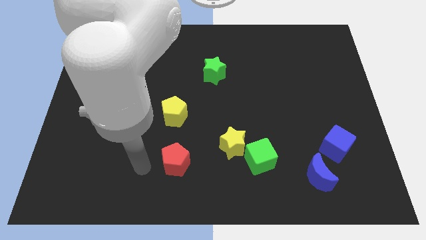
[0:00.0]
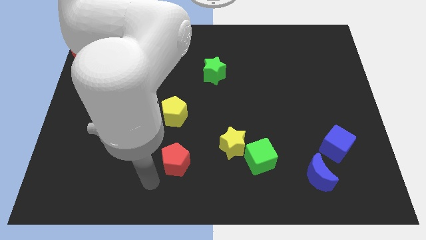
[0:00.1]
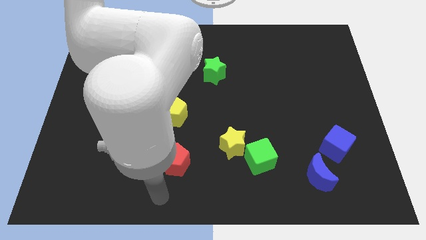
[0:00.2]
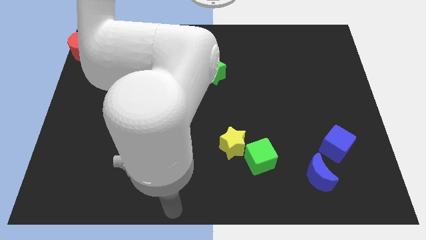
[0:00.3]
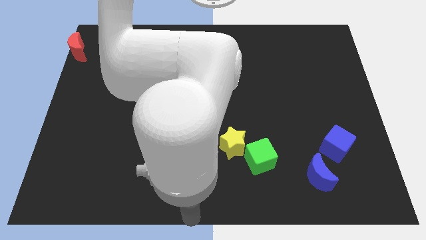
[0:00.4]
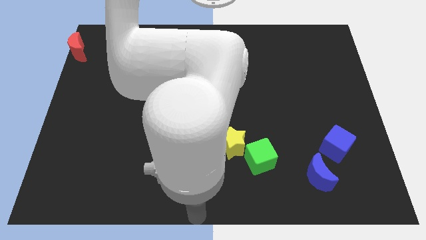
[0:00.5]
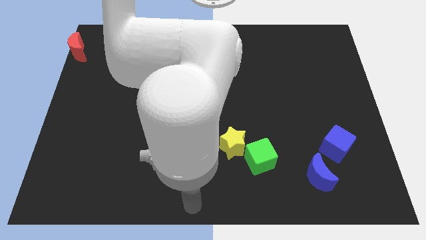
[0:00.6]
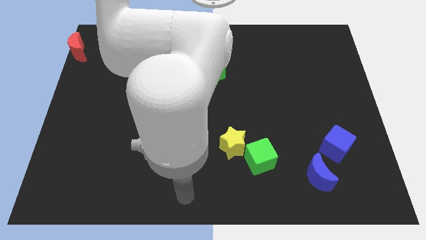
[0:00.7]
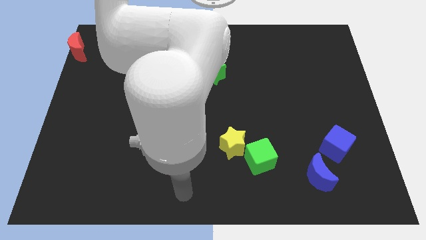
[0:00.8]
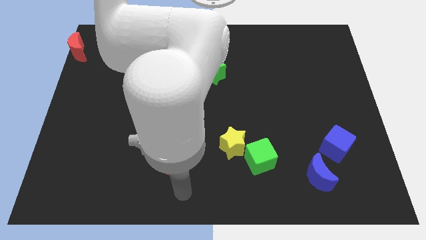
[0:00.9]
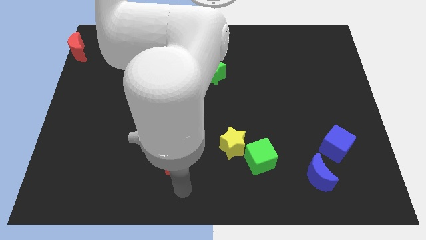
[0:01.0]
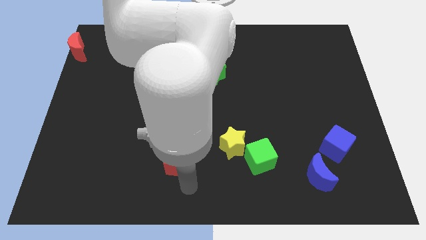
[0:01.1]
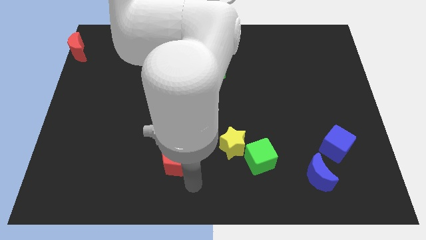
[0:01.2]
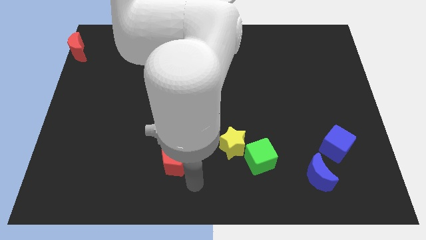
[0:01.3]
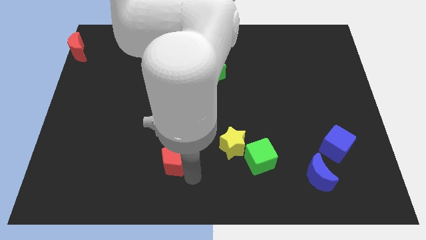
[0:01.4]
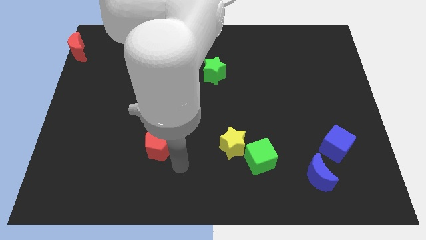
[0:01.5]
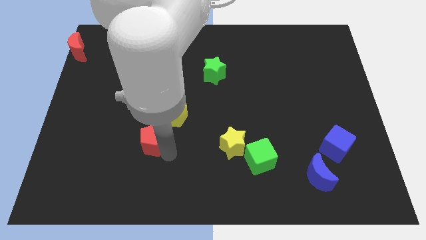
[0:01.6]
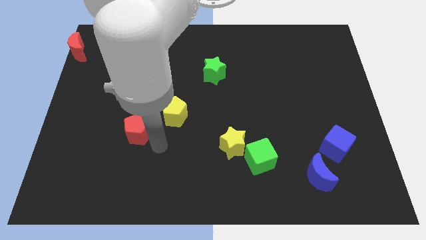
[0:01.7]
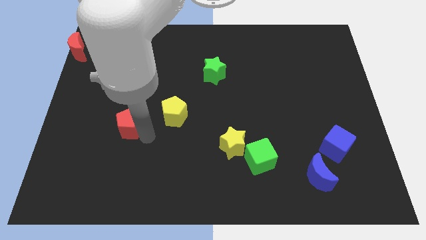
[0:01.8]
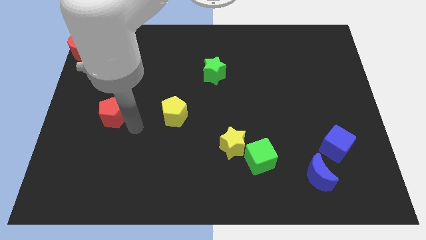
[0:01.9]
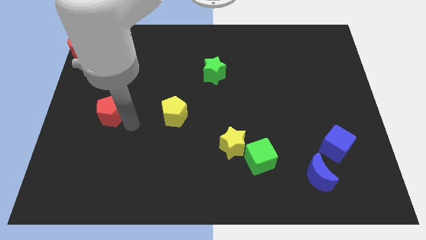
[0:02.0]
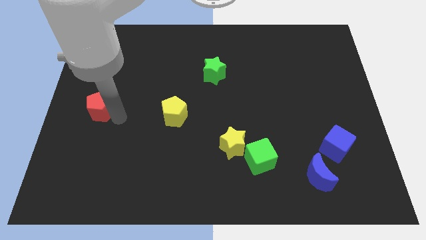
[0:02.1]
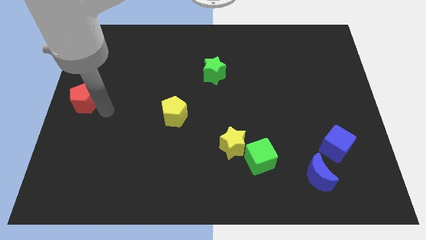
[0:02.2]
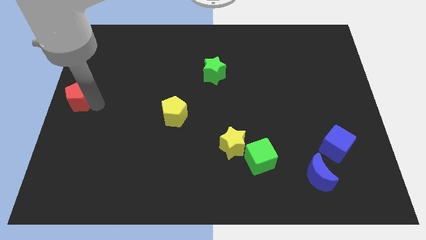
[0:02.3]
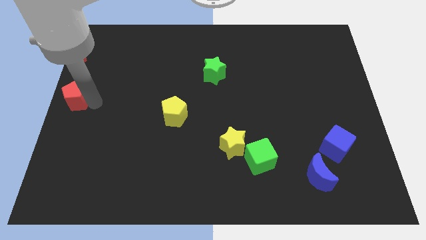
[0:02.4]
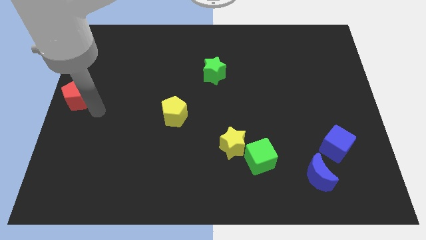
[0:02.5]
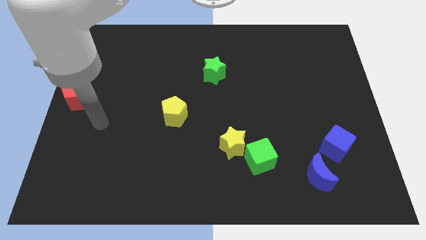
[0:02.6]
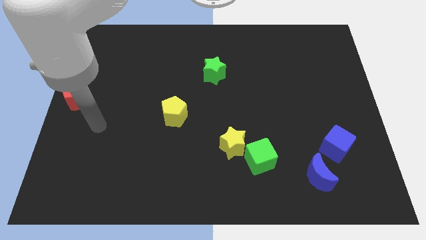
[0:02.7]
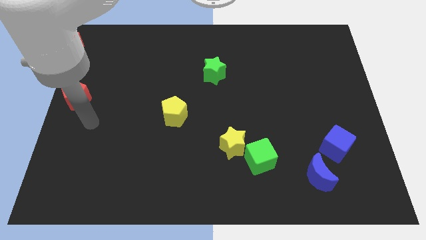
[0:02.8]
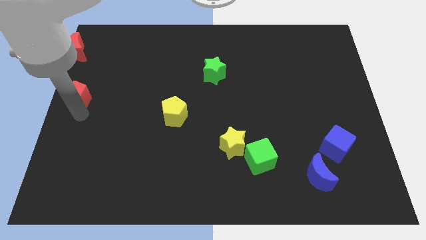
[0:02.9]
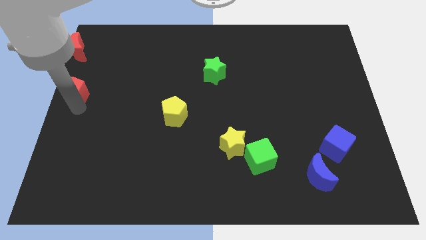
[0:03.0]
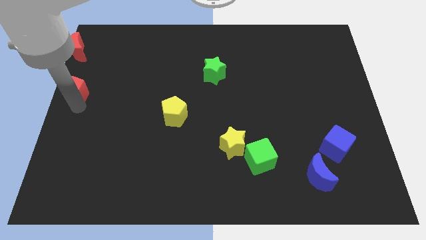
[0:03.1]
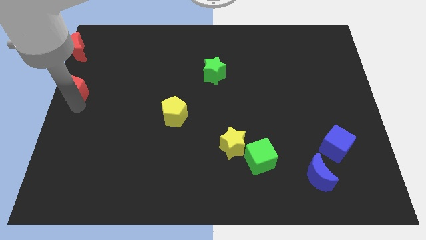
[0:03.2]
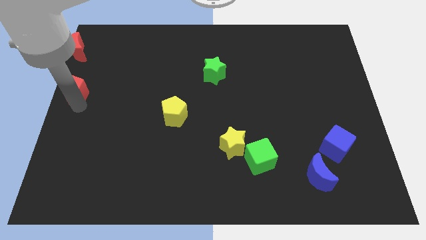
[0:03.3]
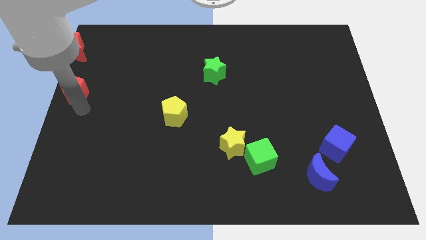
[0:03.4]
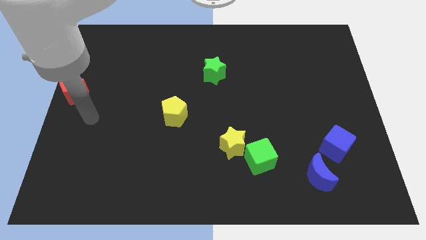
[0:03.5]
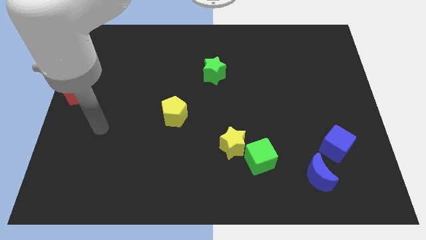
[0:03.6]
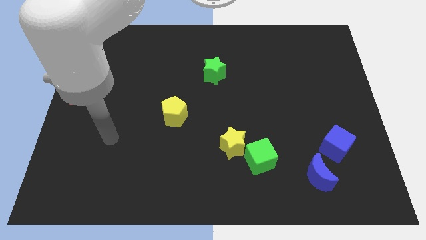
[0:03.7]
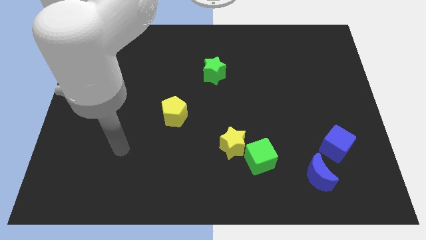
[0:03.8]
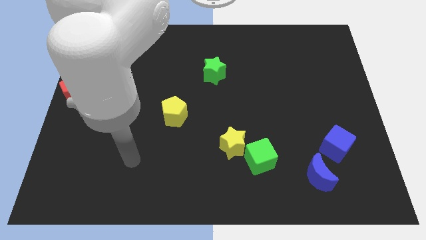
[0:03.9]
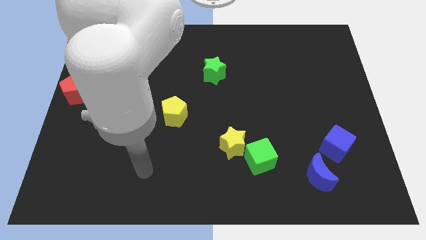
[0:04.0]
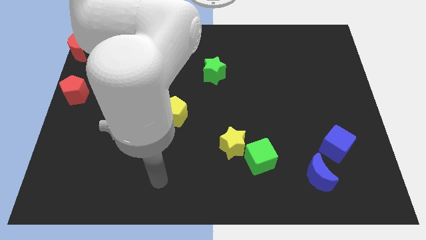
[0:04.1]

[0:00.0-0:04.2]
move the red pentagon below to the red moon

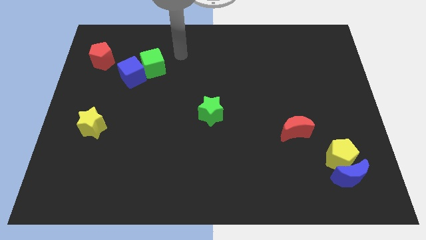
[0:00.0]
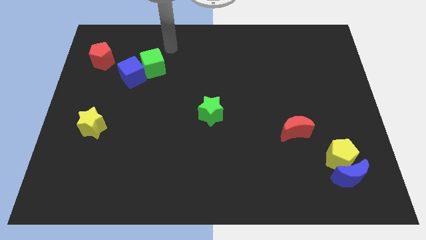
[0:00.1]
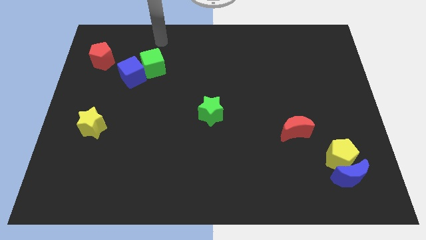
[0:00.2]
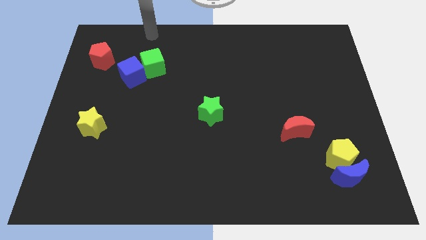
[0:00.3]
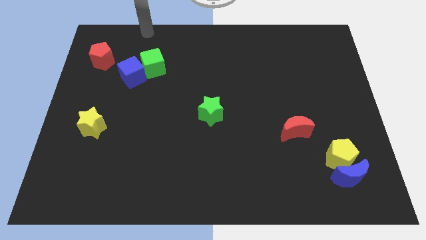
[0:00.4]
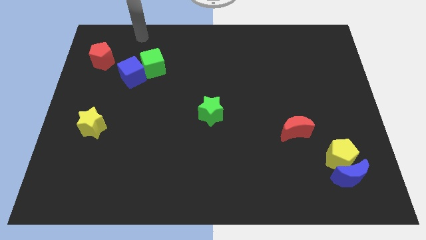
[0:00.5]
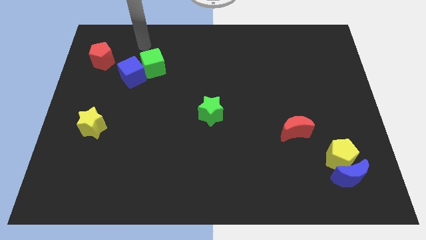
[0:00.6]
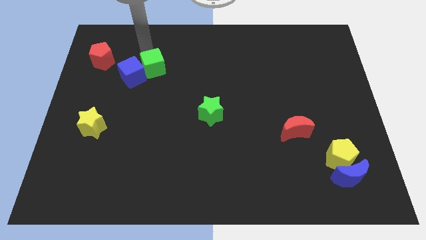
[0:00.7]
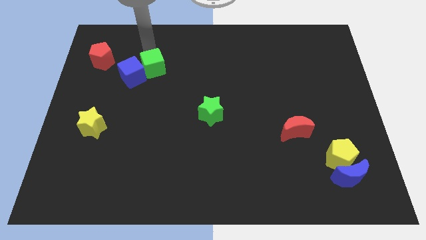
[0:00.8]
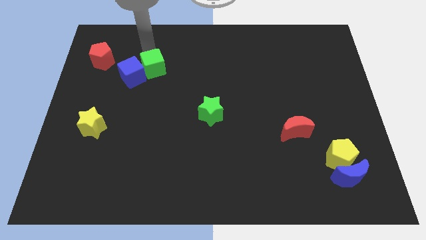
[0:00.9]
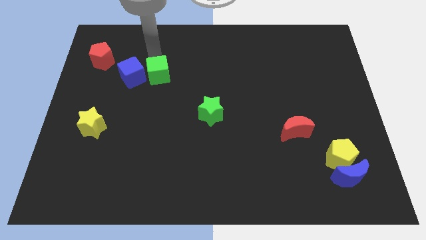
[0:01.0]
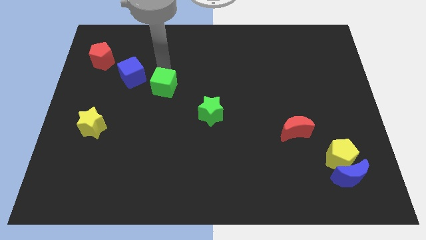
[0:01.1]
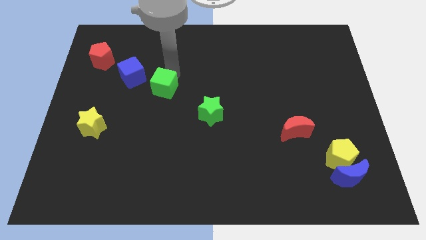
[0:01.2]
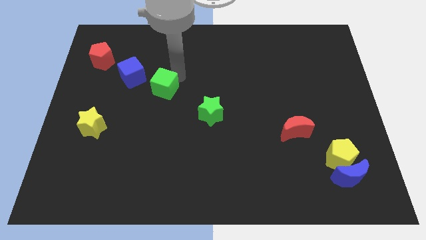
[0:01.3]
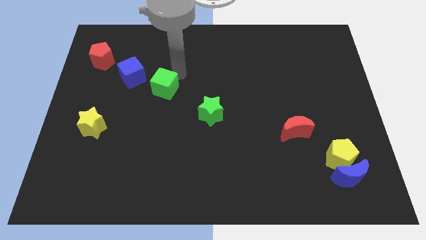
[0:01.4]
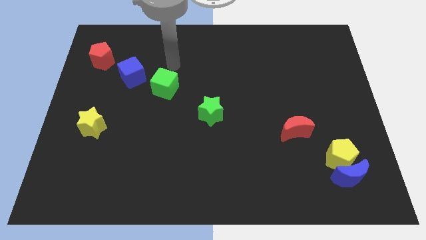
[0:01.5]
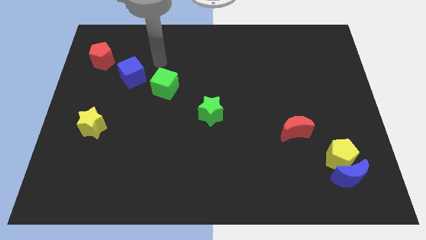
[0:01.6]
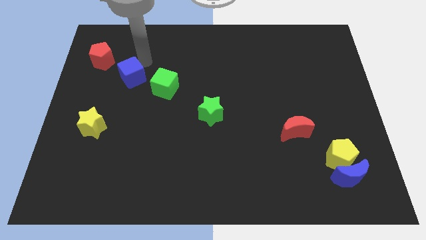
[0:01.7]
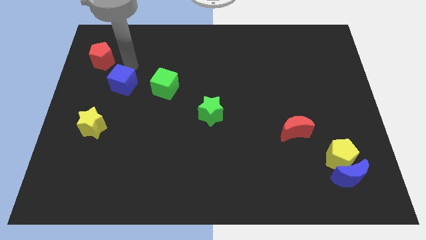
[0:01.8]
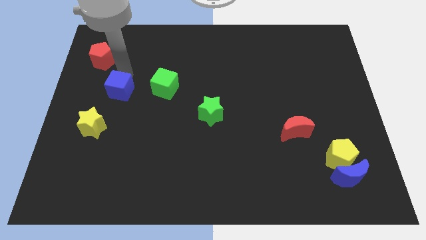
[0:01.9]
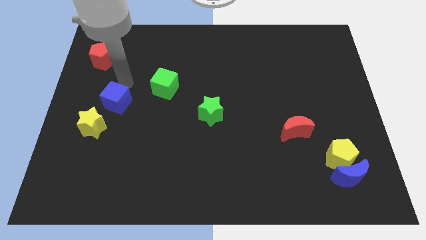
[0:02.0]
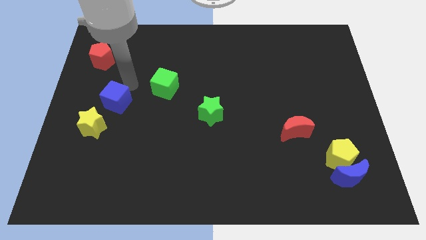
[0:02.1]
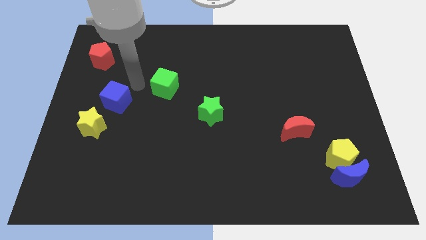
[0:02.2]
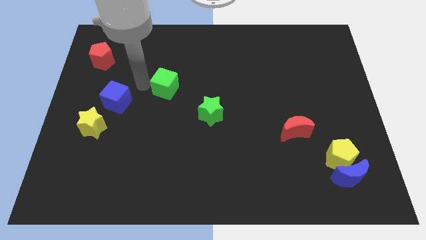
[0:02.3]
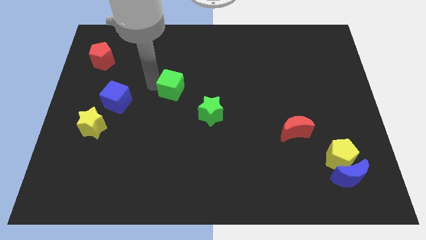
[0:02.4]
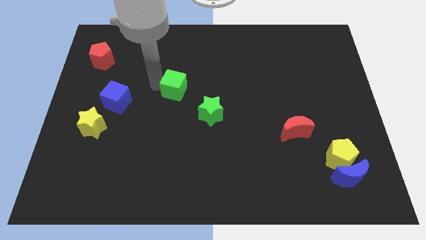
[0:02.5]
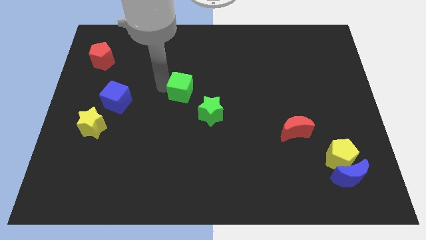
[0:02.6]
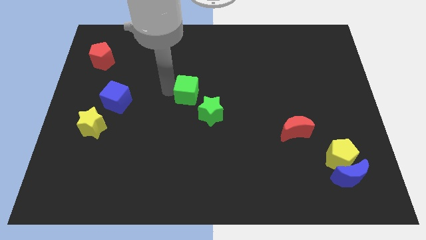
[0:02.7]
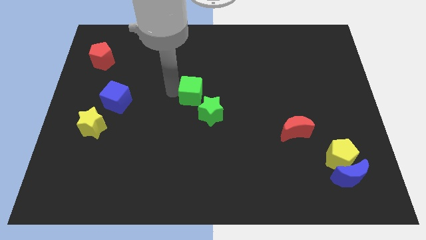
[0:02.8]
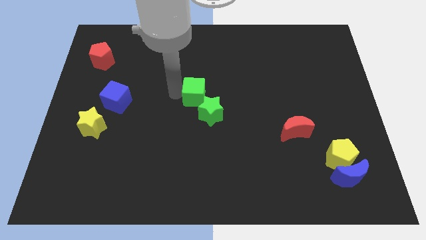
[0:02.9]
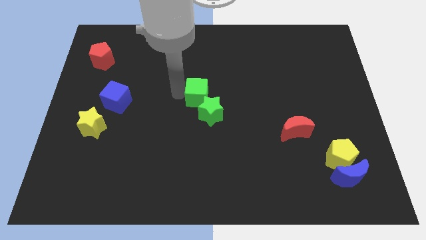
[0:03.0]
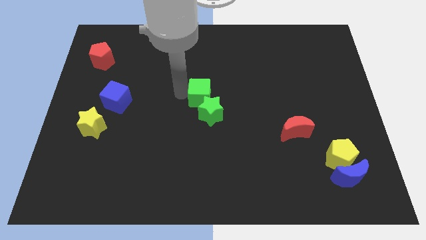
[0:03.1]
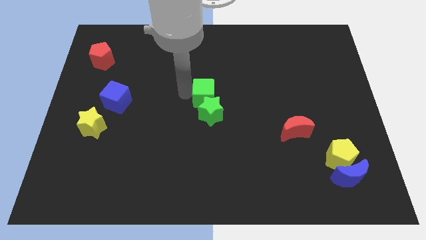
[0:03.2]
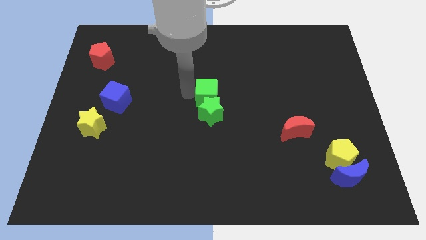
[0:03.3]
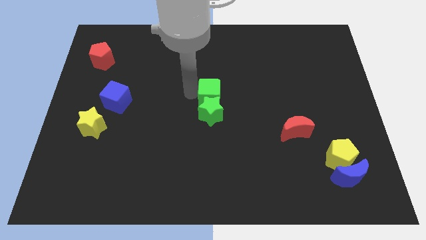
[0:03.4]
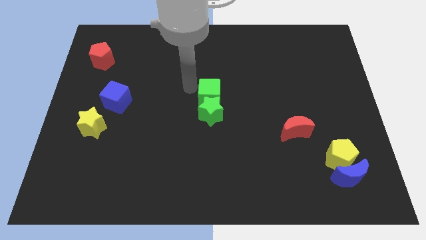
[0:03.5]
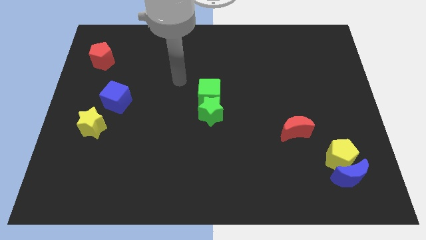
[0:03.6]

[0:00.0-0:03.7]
move the green cube towards the green star

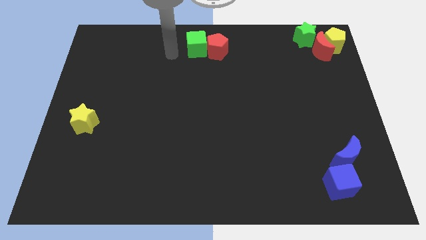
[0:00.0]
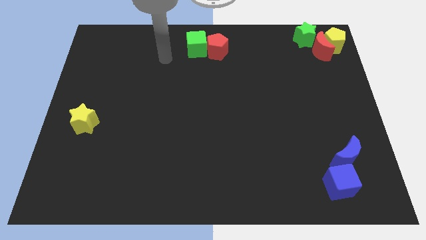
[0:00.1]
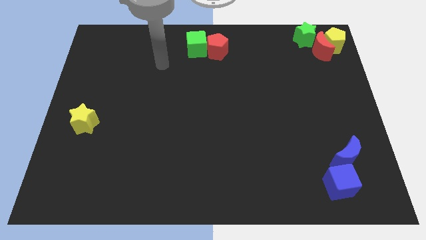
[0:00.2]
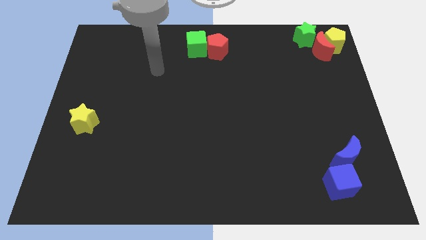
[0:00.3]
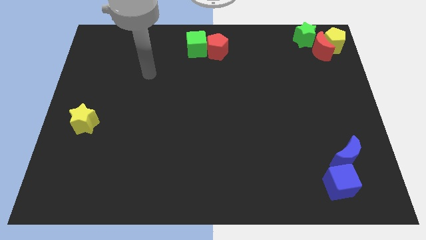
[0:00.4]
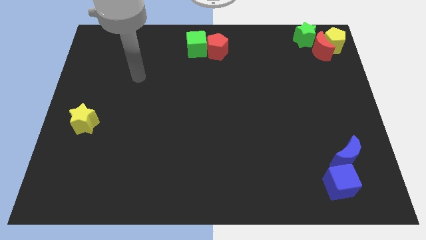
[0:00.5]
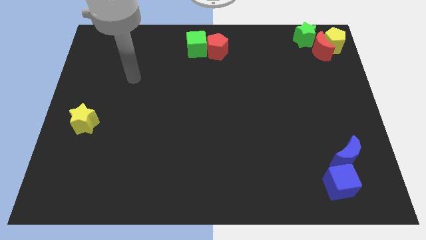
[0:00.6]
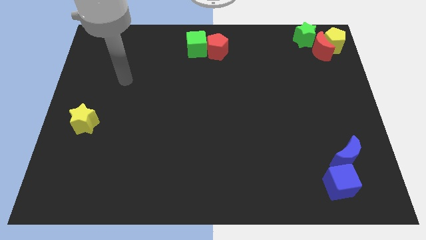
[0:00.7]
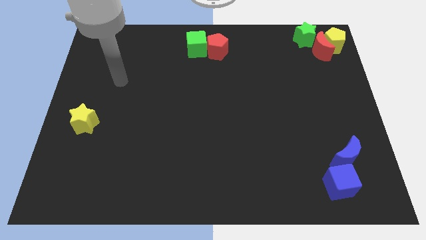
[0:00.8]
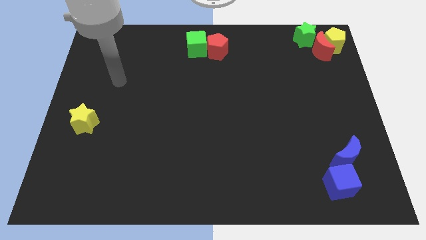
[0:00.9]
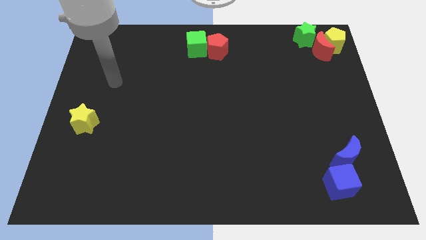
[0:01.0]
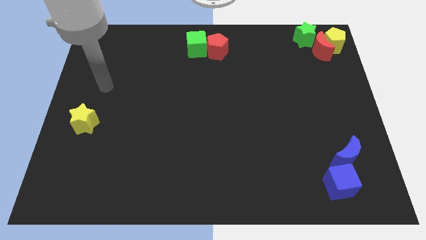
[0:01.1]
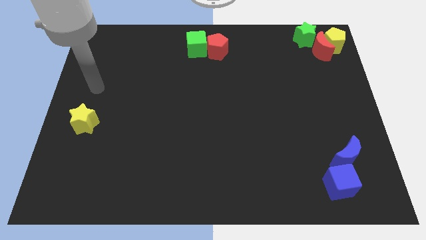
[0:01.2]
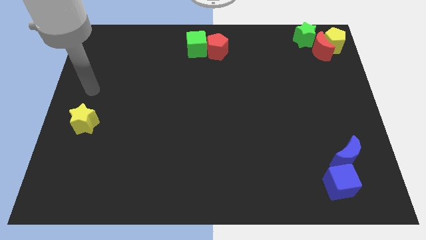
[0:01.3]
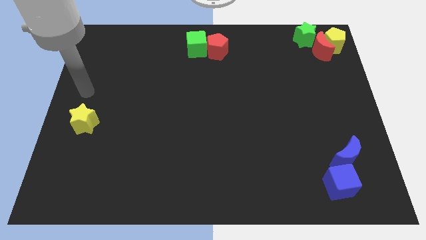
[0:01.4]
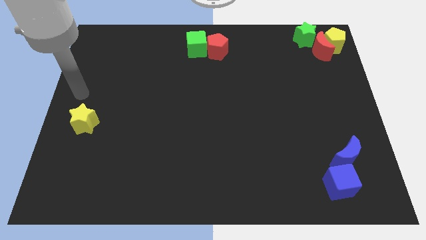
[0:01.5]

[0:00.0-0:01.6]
place your hand above the yellow star
